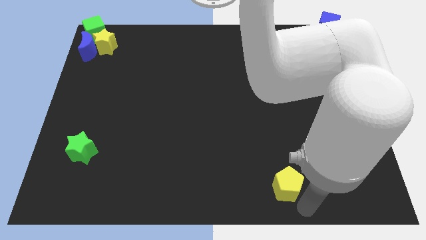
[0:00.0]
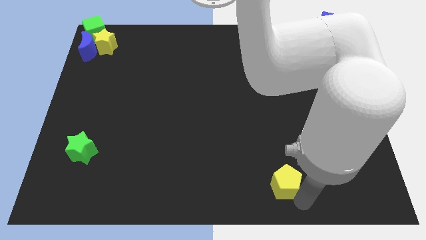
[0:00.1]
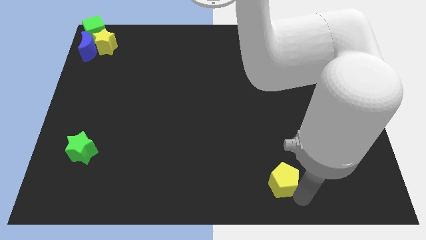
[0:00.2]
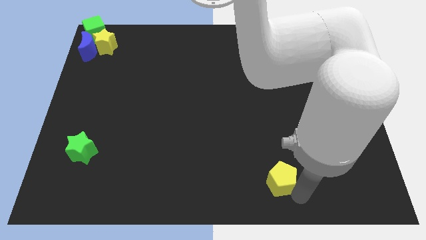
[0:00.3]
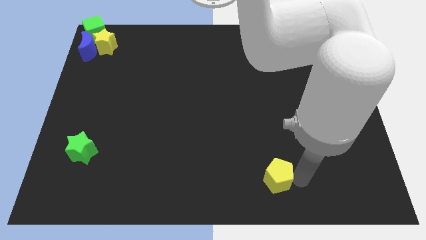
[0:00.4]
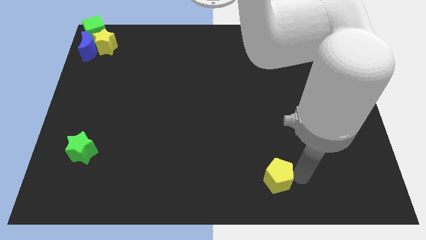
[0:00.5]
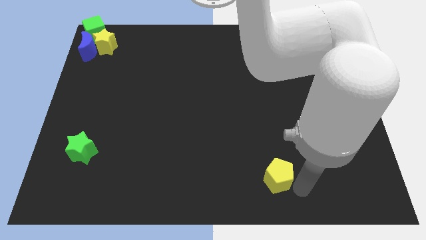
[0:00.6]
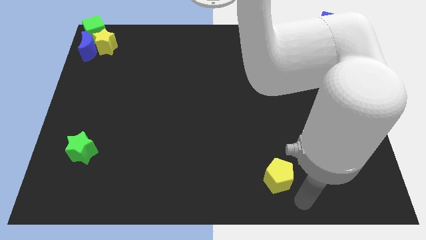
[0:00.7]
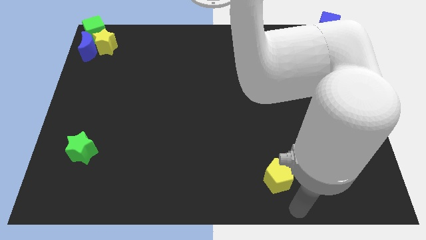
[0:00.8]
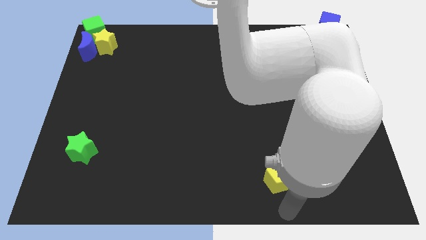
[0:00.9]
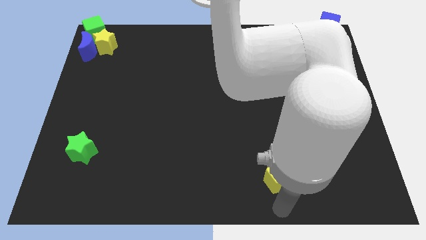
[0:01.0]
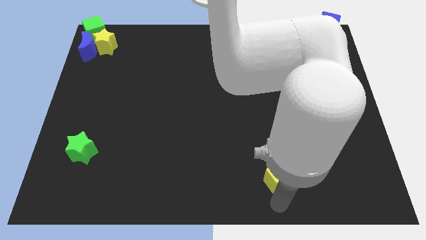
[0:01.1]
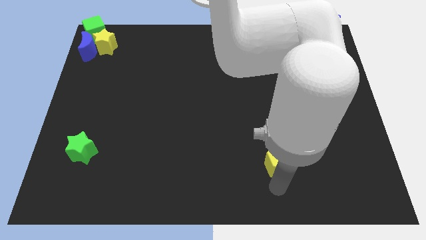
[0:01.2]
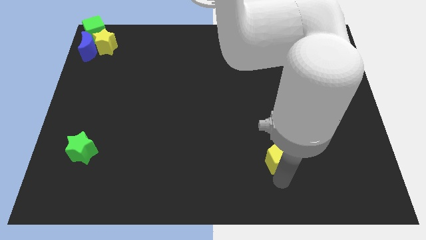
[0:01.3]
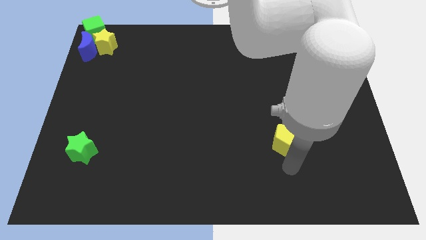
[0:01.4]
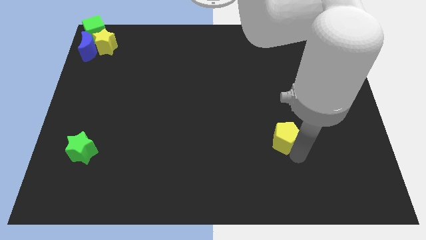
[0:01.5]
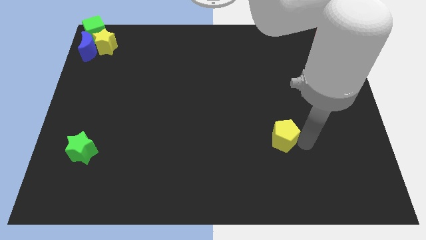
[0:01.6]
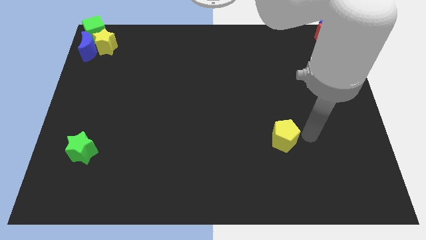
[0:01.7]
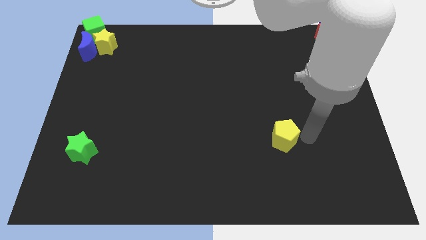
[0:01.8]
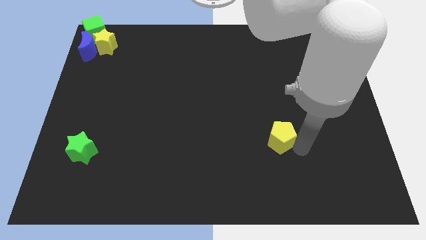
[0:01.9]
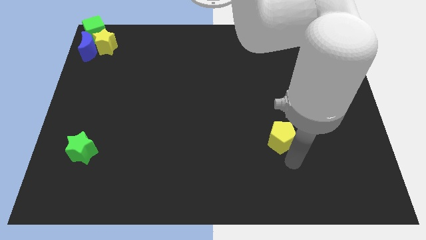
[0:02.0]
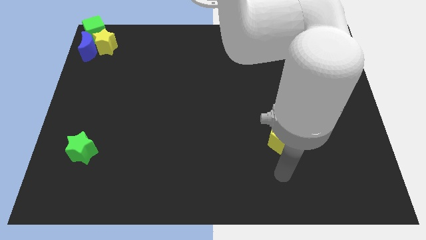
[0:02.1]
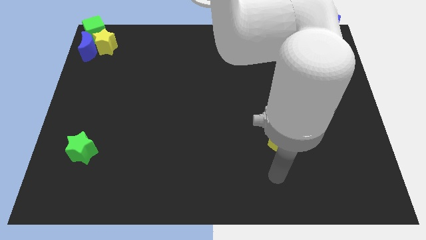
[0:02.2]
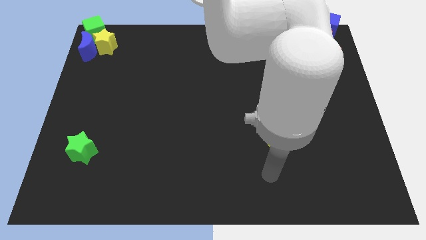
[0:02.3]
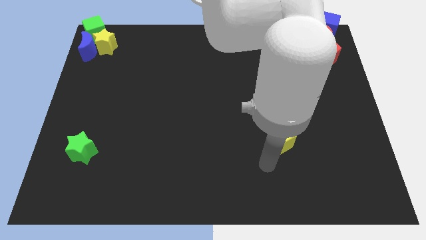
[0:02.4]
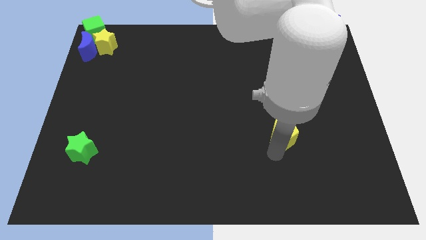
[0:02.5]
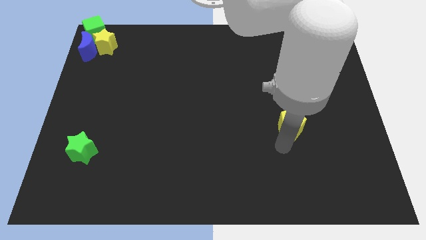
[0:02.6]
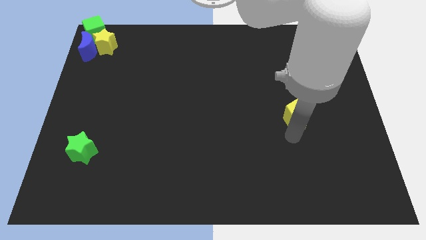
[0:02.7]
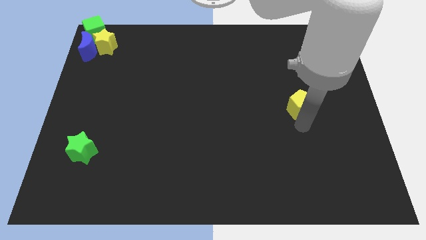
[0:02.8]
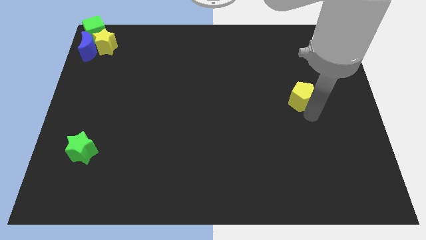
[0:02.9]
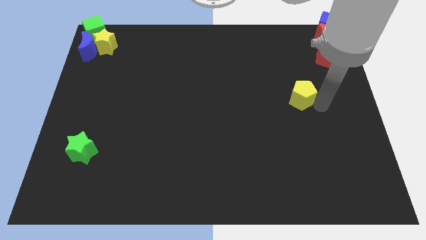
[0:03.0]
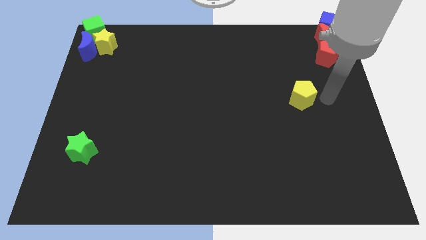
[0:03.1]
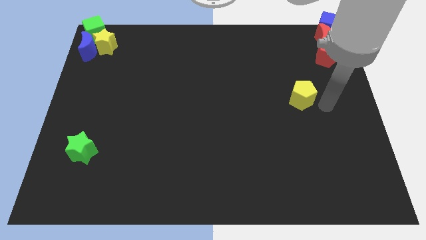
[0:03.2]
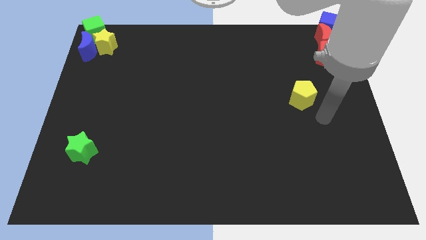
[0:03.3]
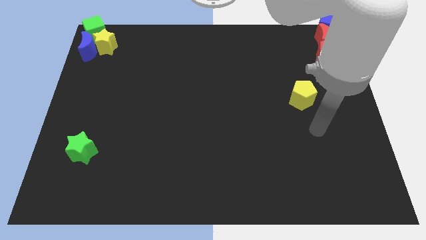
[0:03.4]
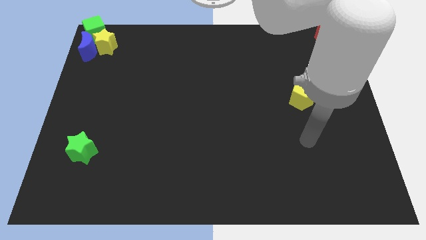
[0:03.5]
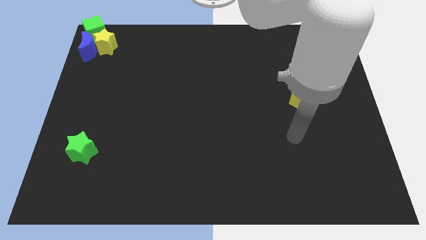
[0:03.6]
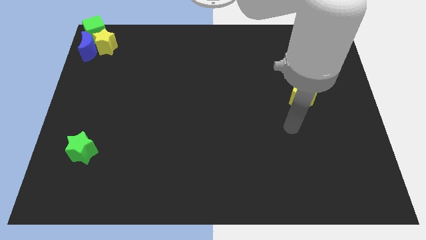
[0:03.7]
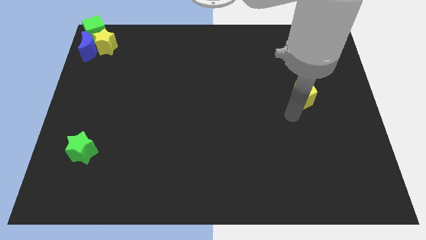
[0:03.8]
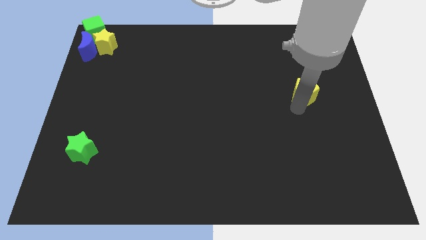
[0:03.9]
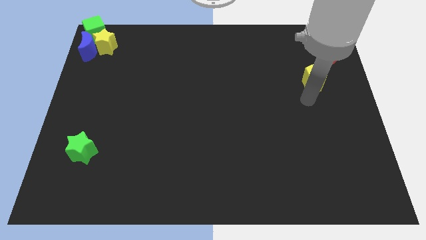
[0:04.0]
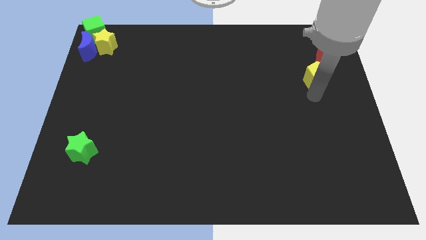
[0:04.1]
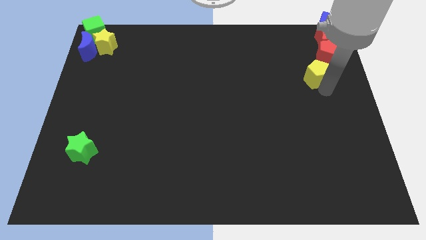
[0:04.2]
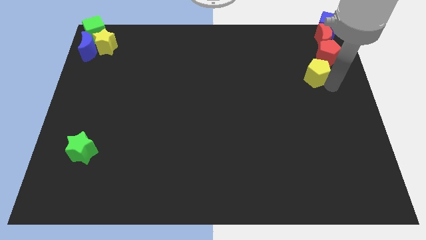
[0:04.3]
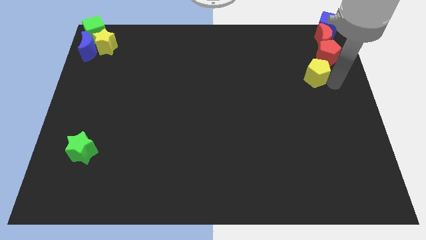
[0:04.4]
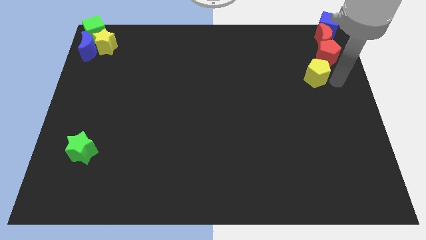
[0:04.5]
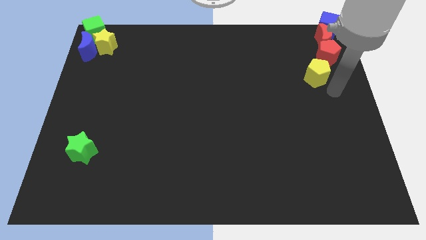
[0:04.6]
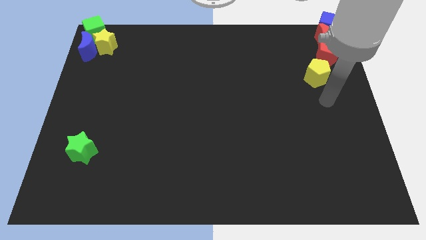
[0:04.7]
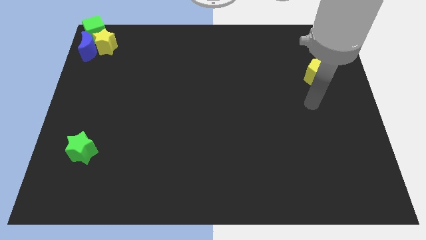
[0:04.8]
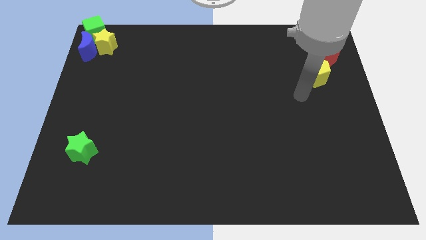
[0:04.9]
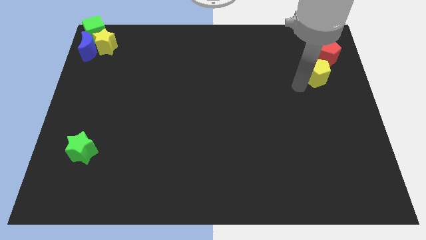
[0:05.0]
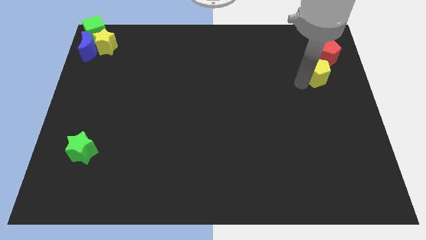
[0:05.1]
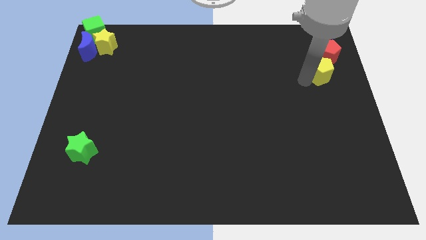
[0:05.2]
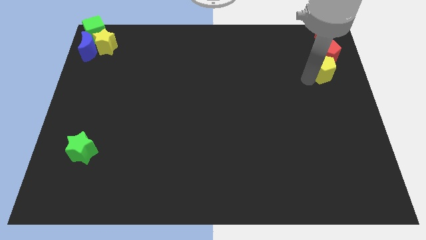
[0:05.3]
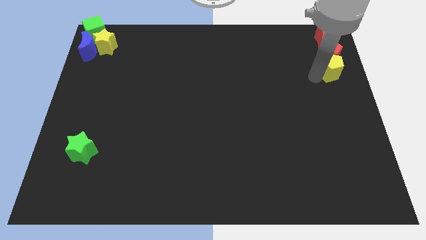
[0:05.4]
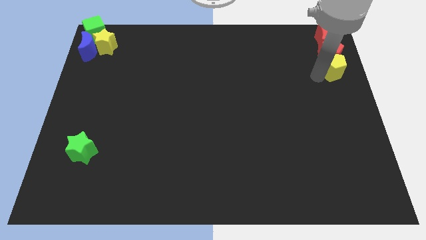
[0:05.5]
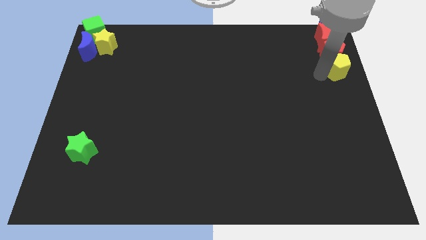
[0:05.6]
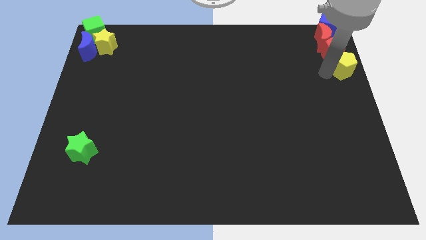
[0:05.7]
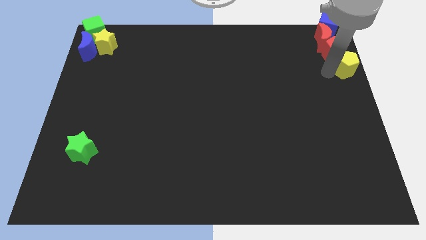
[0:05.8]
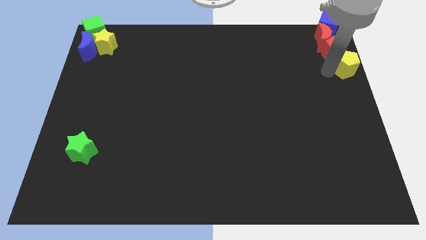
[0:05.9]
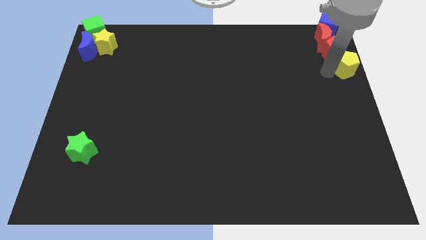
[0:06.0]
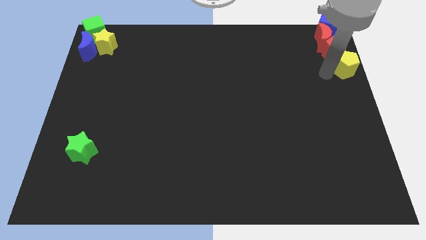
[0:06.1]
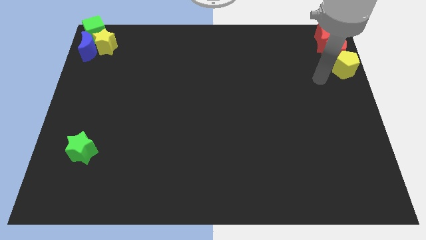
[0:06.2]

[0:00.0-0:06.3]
move the yellow pentagon into the red pentagon

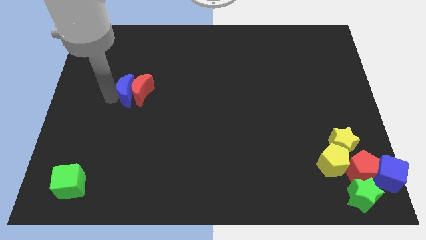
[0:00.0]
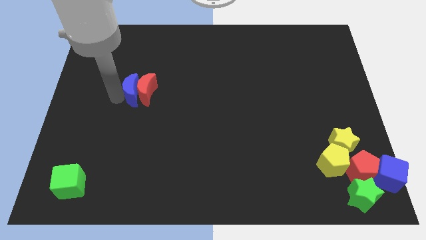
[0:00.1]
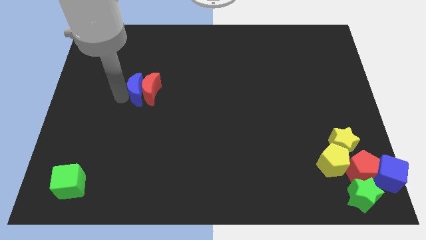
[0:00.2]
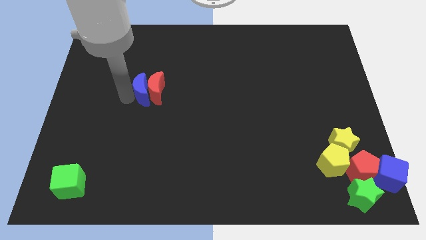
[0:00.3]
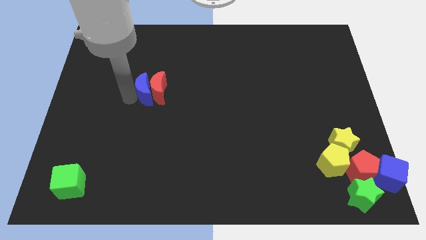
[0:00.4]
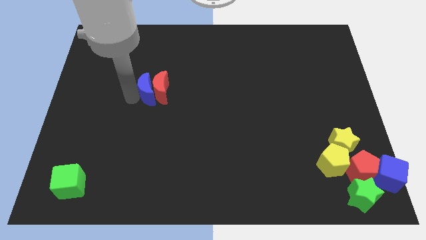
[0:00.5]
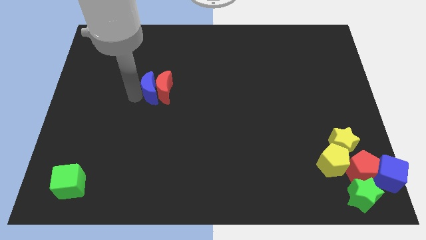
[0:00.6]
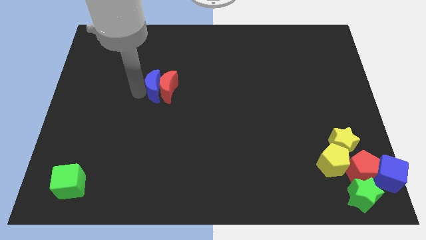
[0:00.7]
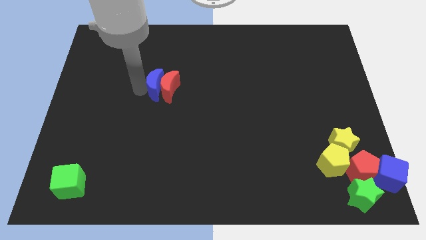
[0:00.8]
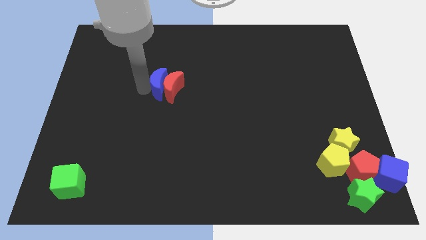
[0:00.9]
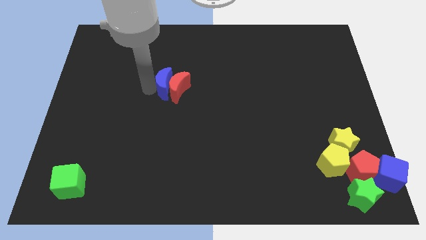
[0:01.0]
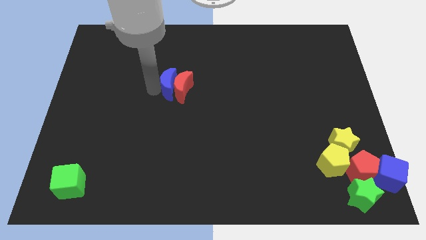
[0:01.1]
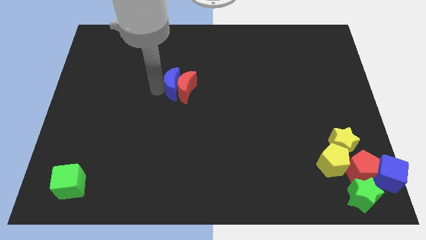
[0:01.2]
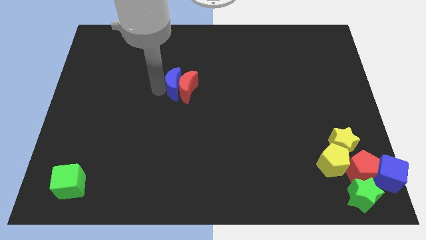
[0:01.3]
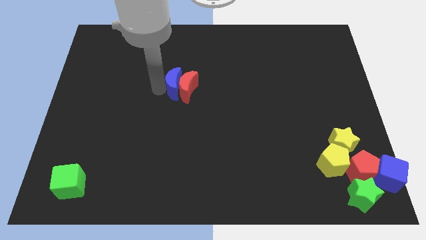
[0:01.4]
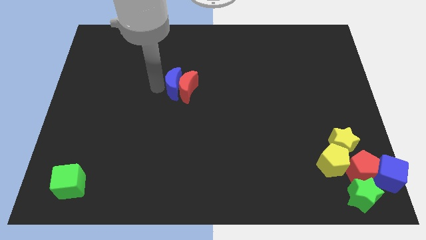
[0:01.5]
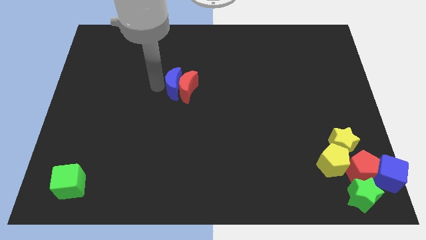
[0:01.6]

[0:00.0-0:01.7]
push the red moon with the blue moon to the middle of the board

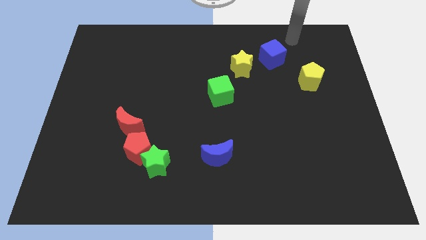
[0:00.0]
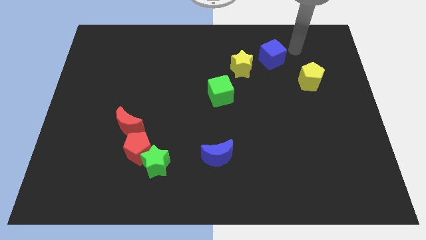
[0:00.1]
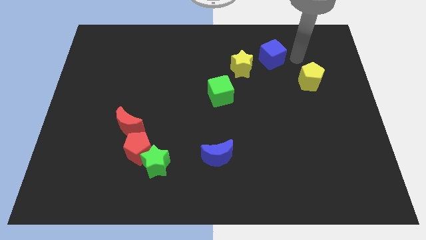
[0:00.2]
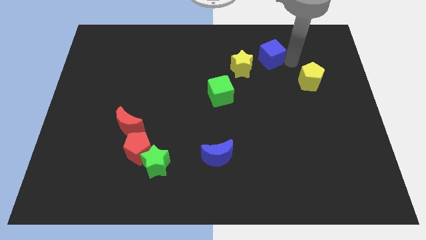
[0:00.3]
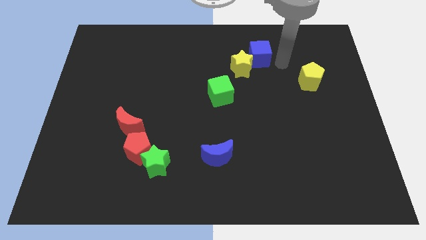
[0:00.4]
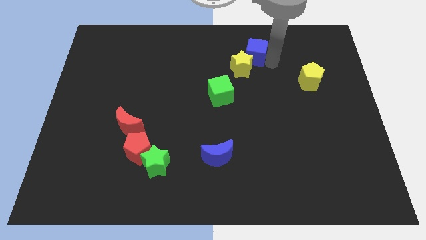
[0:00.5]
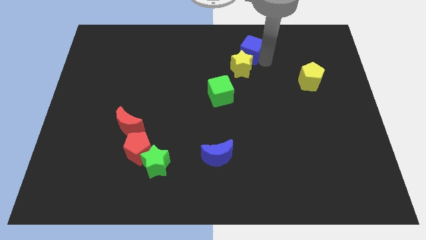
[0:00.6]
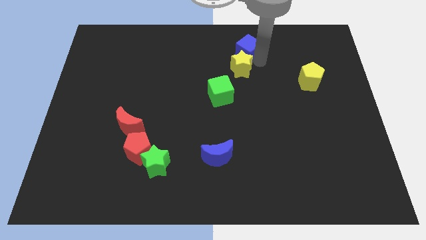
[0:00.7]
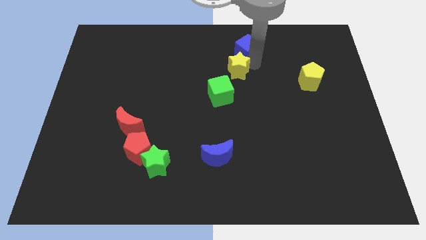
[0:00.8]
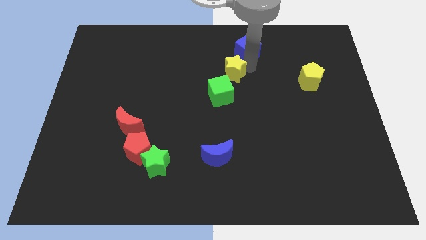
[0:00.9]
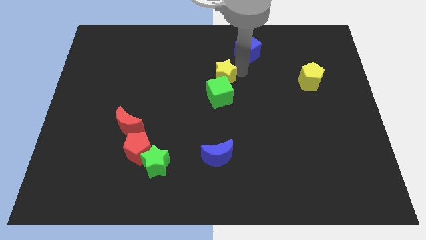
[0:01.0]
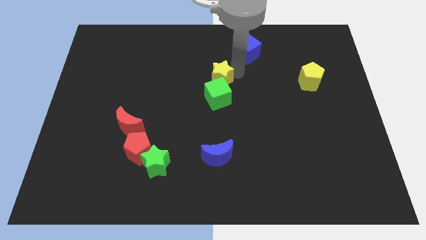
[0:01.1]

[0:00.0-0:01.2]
push the blue cube into the green cube
